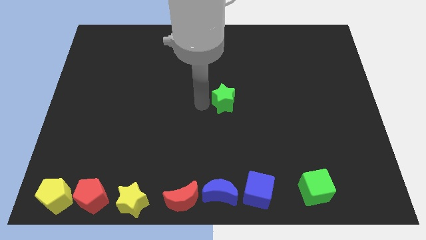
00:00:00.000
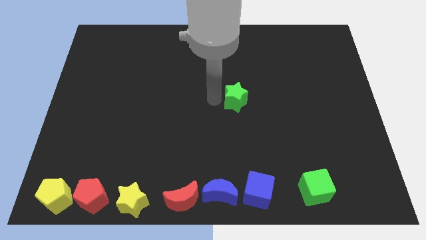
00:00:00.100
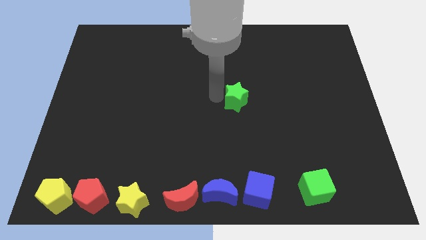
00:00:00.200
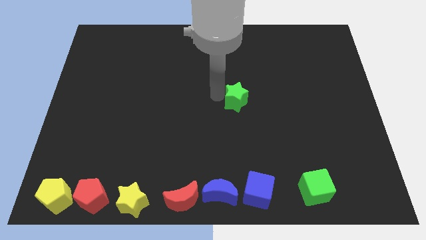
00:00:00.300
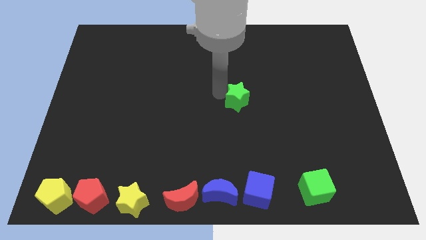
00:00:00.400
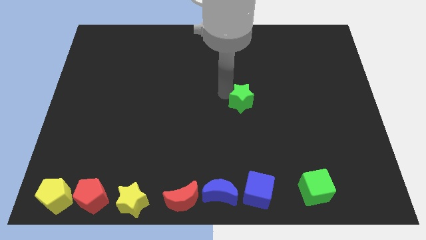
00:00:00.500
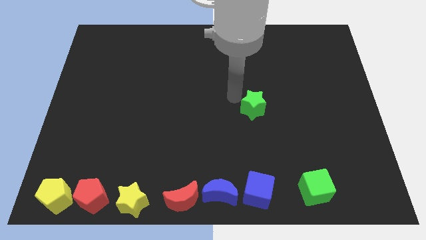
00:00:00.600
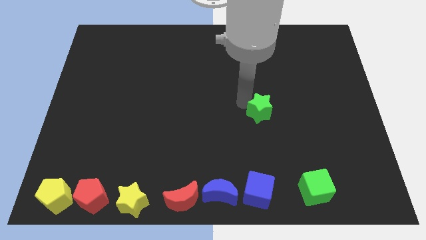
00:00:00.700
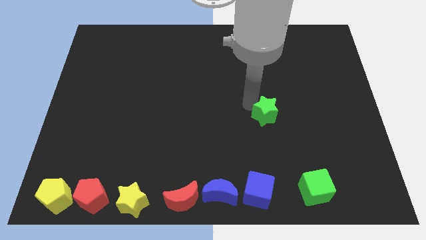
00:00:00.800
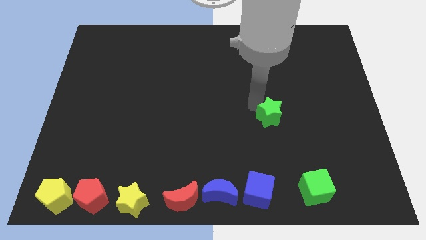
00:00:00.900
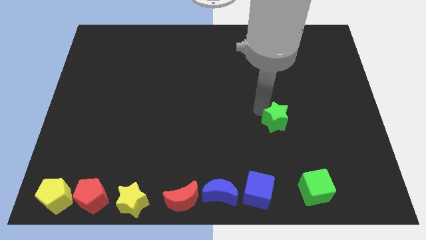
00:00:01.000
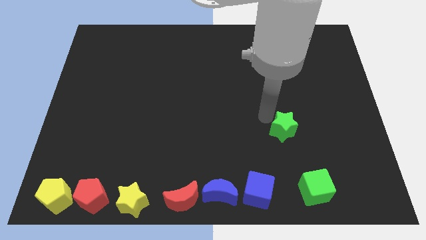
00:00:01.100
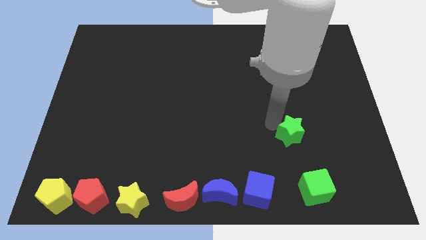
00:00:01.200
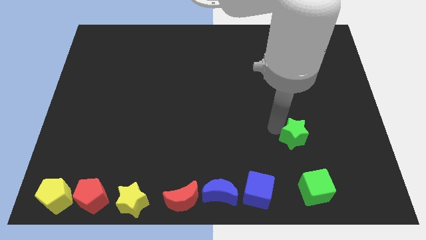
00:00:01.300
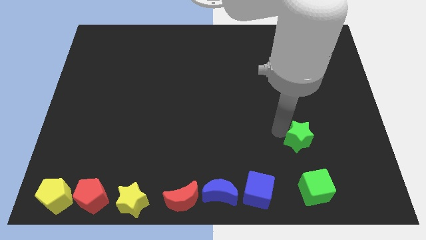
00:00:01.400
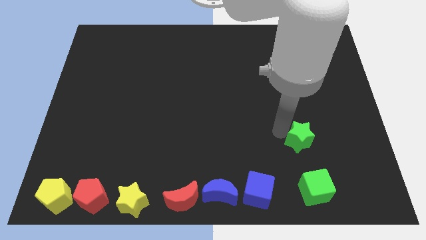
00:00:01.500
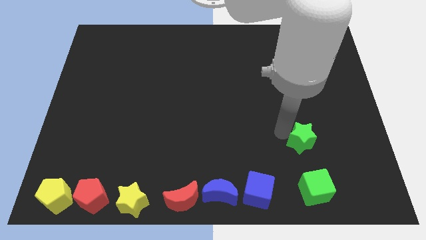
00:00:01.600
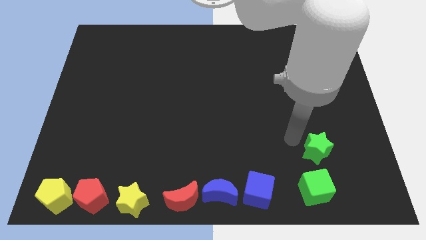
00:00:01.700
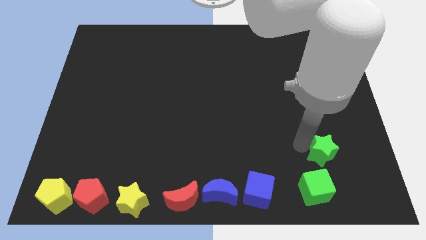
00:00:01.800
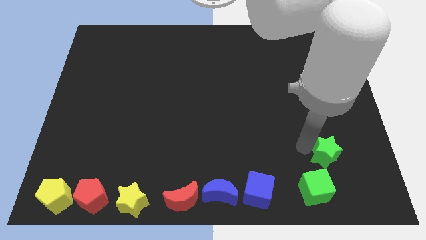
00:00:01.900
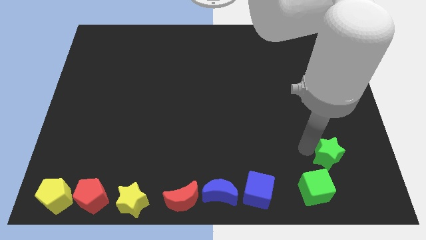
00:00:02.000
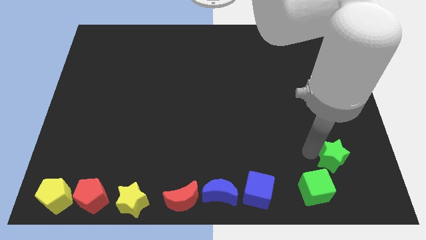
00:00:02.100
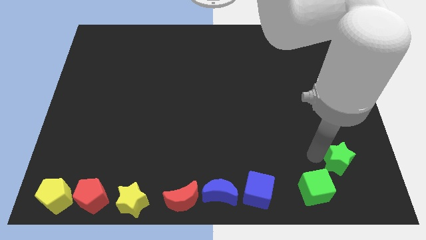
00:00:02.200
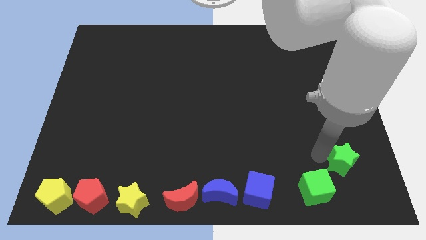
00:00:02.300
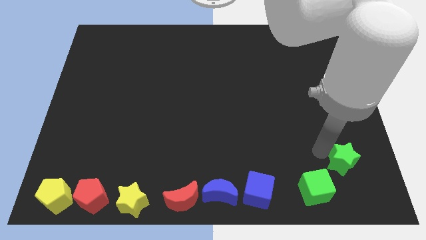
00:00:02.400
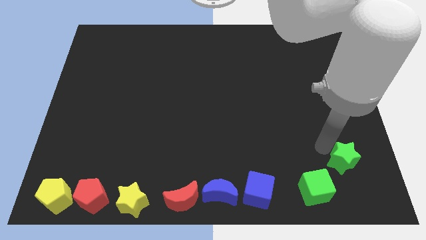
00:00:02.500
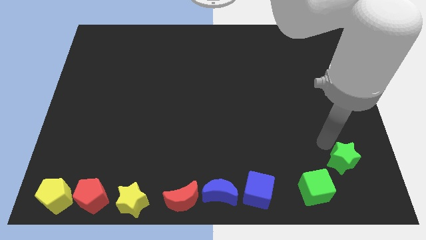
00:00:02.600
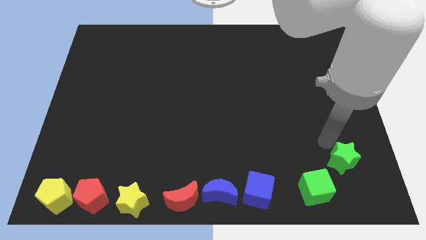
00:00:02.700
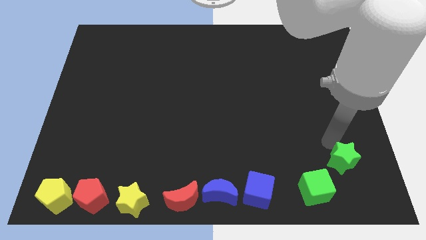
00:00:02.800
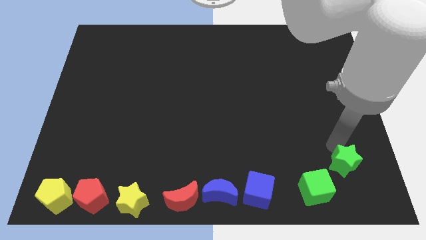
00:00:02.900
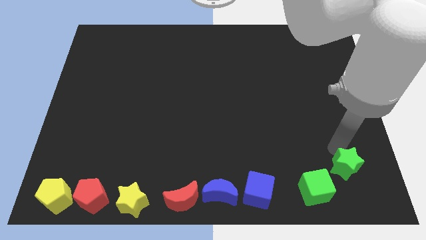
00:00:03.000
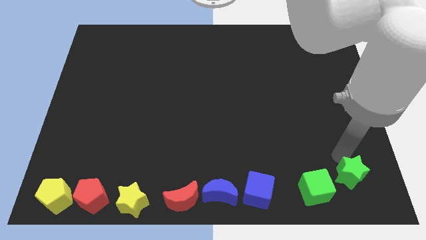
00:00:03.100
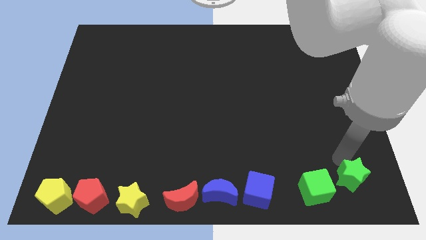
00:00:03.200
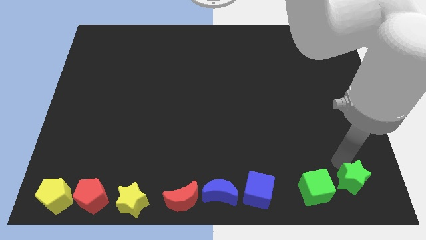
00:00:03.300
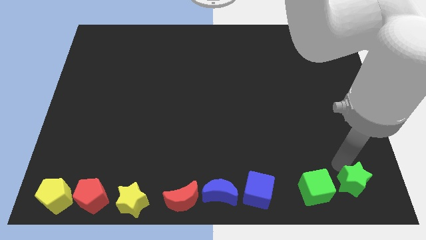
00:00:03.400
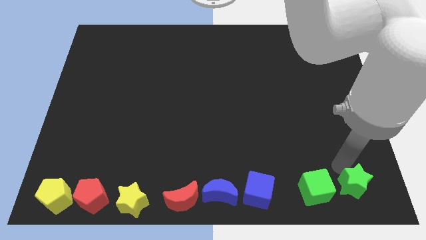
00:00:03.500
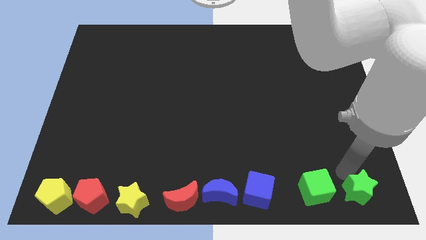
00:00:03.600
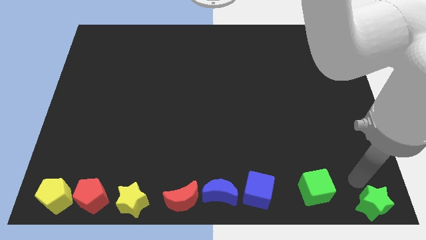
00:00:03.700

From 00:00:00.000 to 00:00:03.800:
push the green star to the right of the green cube

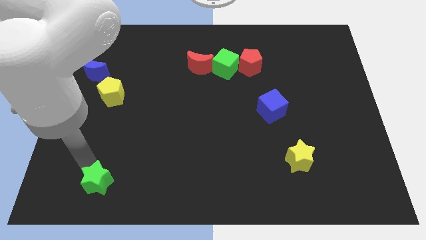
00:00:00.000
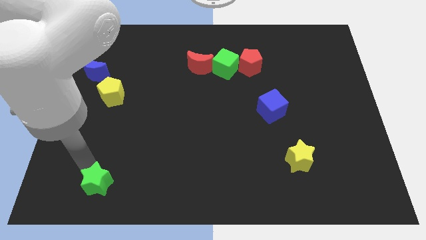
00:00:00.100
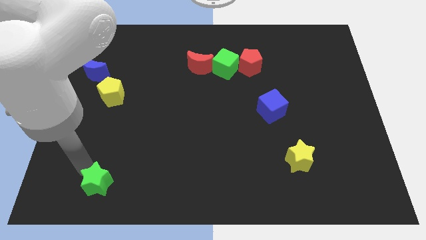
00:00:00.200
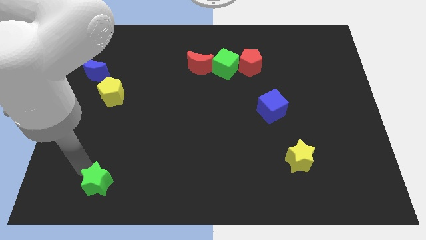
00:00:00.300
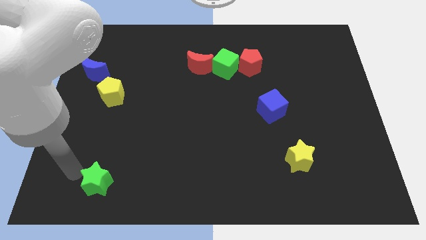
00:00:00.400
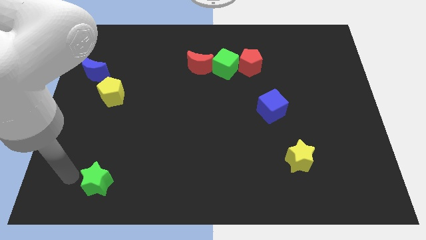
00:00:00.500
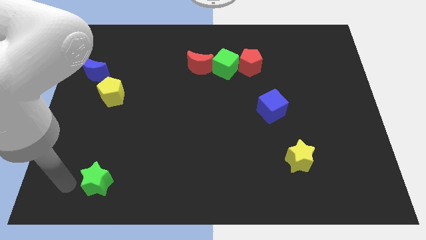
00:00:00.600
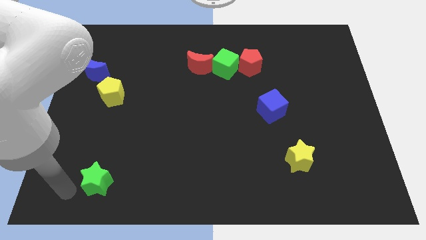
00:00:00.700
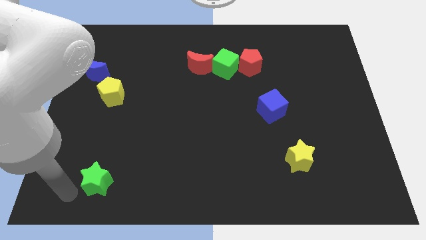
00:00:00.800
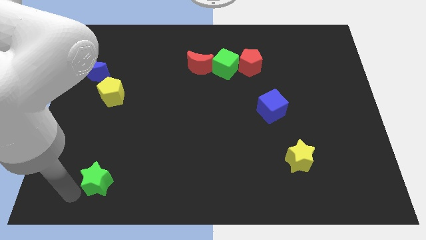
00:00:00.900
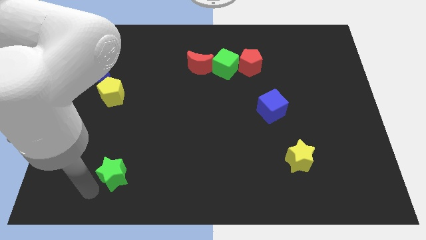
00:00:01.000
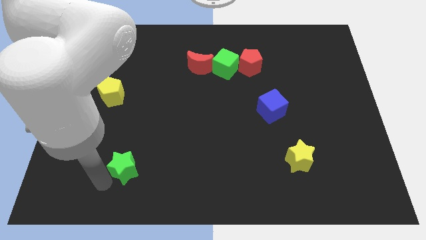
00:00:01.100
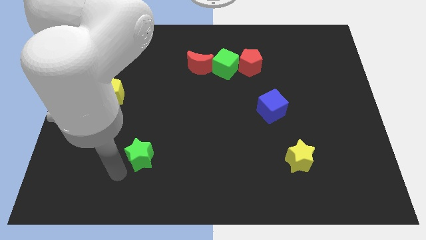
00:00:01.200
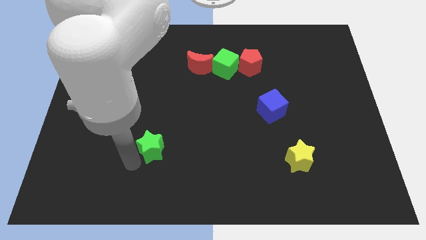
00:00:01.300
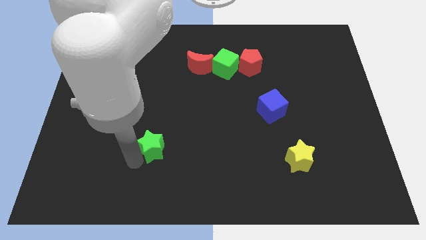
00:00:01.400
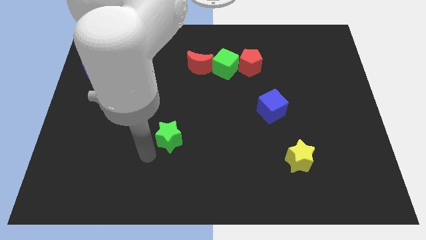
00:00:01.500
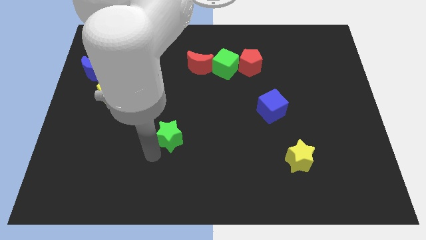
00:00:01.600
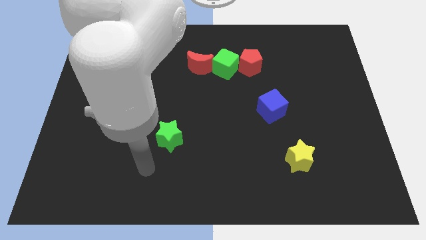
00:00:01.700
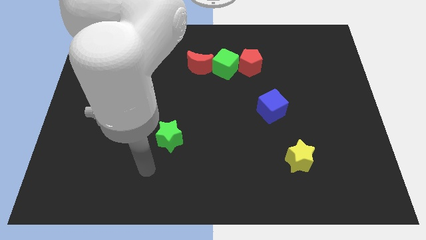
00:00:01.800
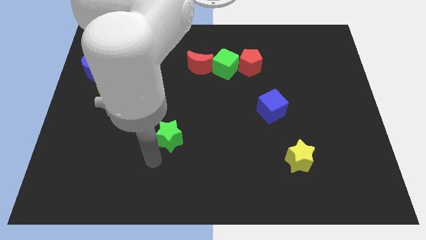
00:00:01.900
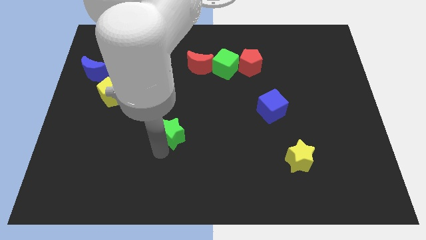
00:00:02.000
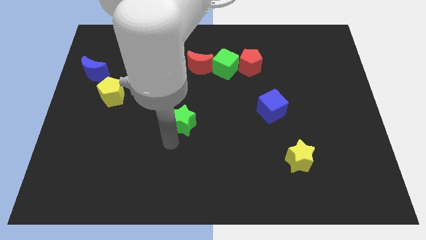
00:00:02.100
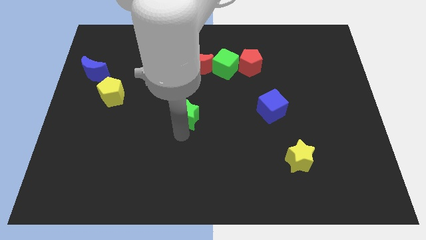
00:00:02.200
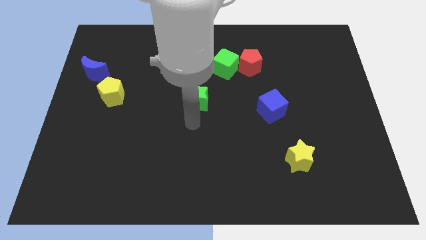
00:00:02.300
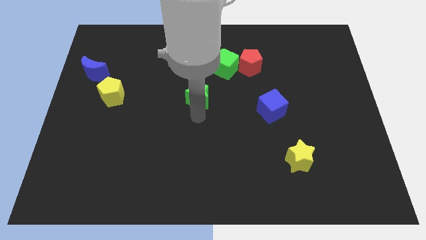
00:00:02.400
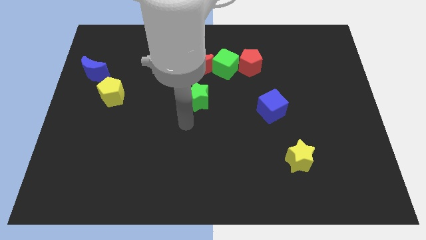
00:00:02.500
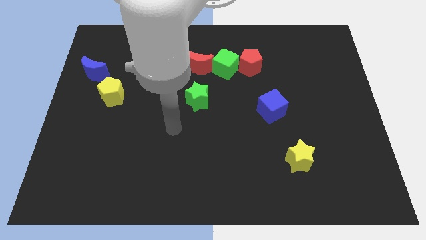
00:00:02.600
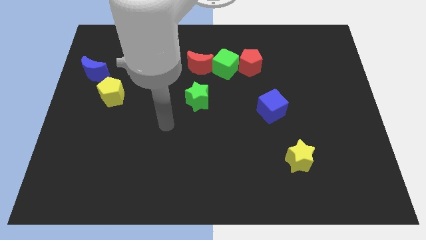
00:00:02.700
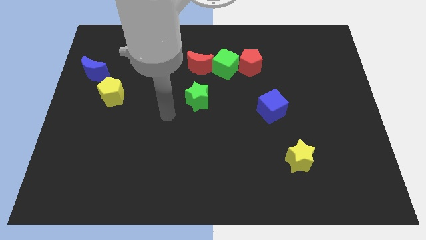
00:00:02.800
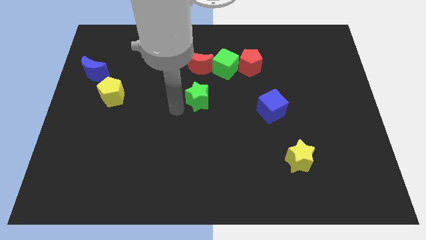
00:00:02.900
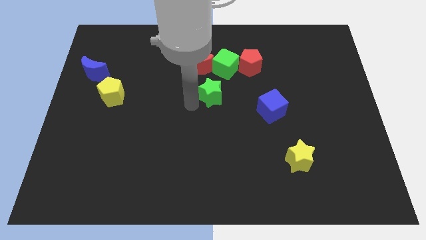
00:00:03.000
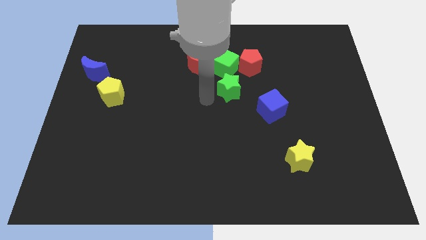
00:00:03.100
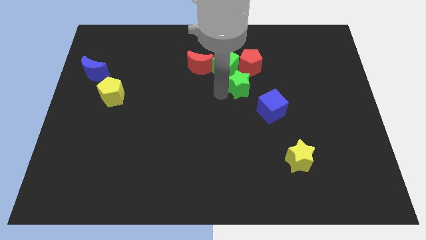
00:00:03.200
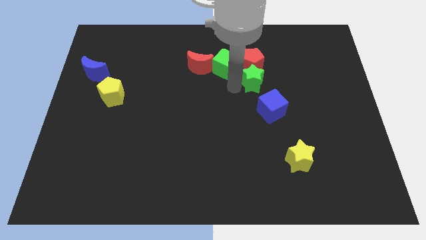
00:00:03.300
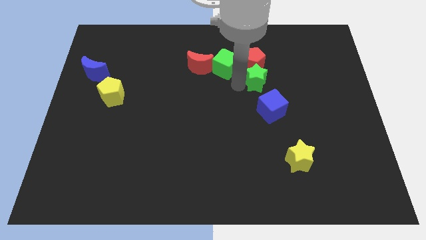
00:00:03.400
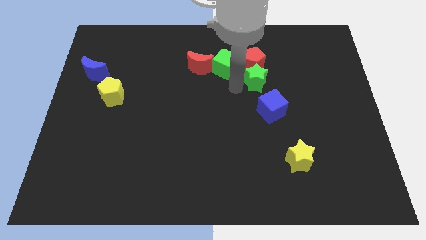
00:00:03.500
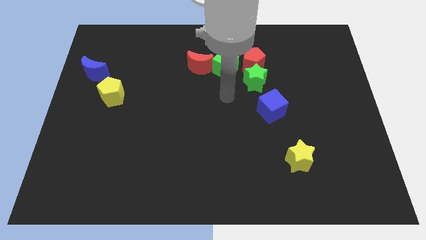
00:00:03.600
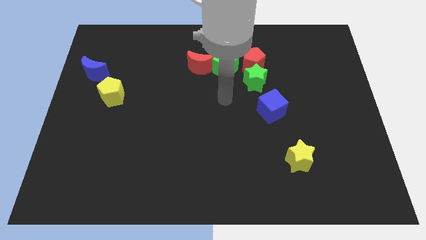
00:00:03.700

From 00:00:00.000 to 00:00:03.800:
push the green star down to the red pentagon

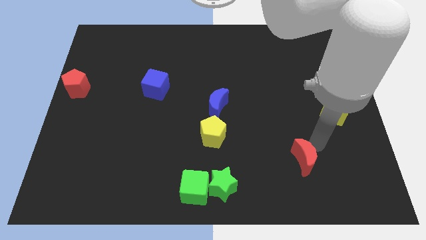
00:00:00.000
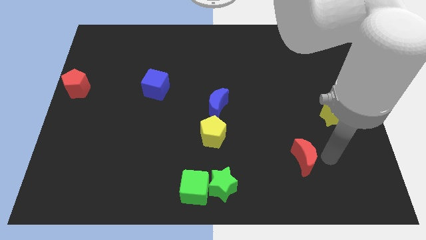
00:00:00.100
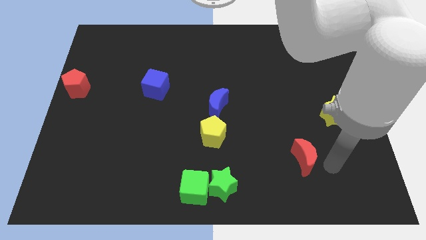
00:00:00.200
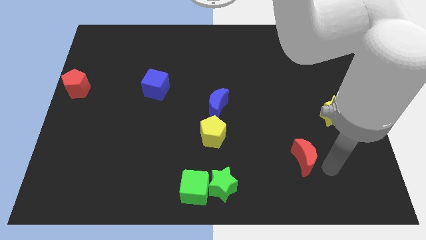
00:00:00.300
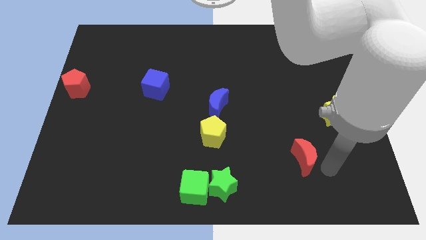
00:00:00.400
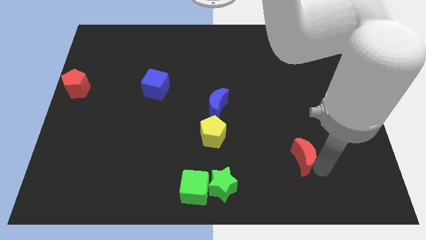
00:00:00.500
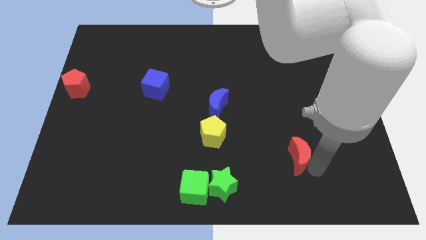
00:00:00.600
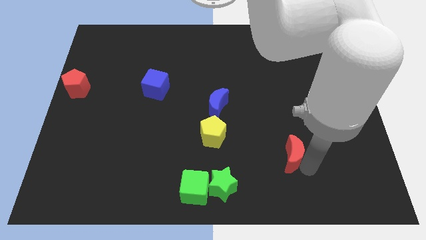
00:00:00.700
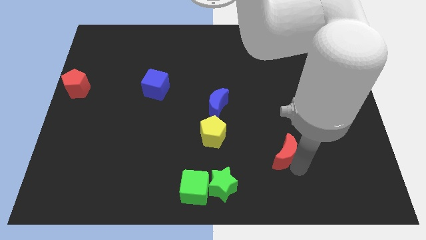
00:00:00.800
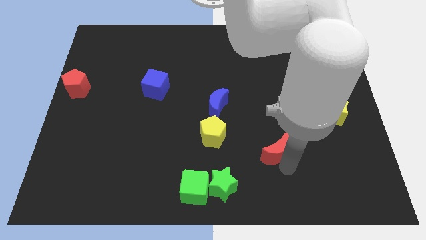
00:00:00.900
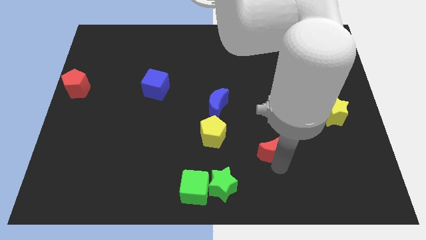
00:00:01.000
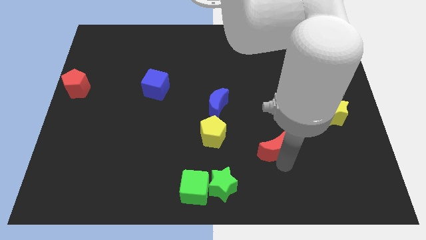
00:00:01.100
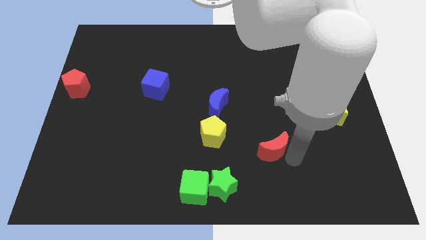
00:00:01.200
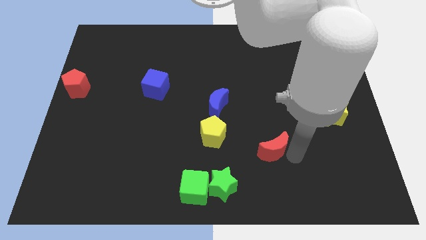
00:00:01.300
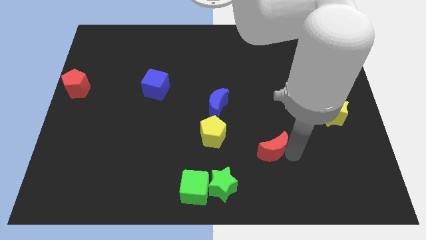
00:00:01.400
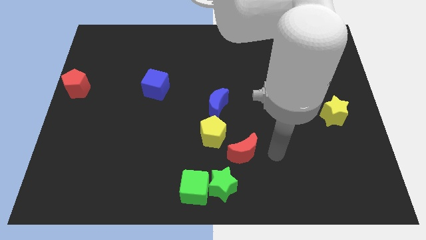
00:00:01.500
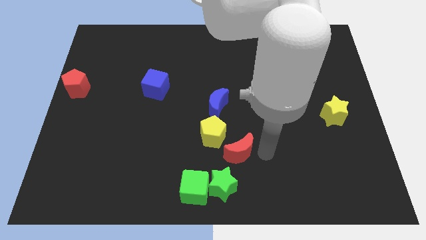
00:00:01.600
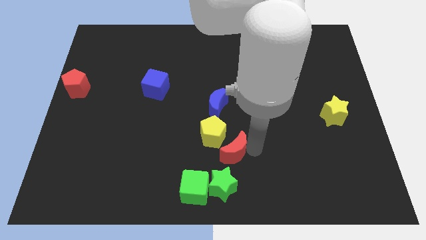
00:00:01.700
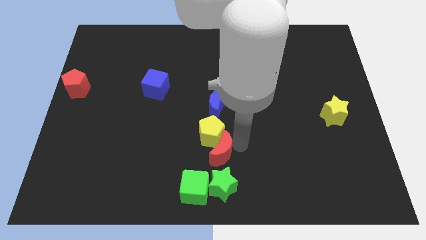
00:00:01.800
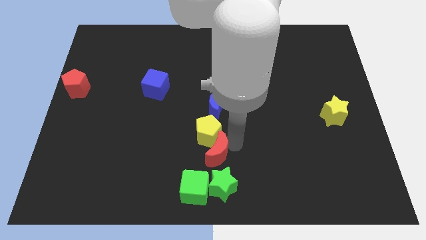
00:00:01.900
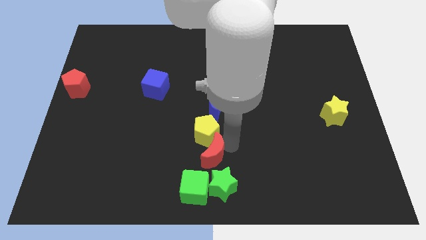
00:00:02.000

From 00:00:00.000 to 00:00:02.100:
push the red crescent into the yellow pentagon
